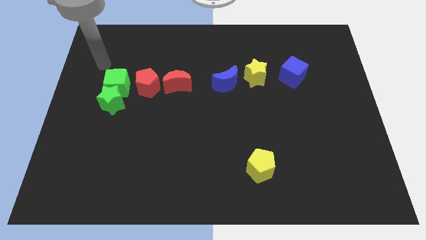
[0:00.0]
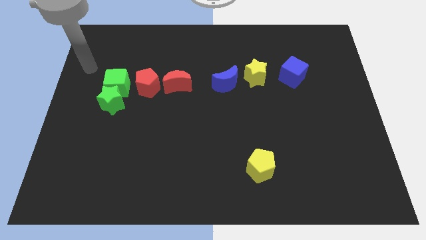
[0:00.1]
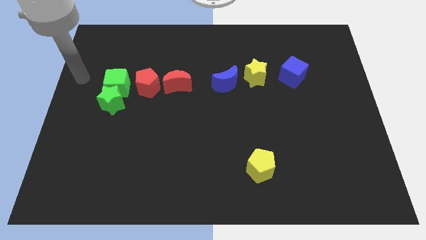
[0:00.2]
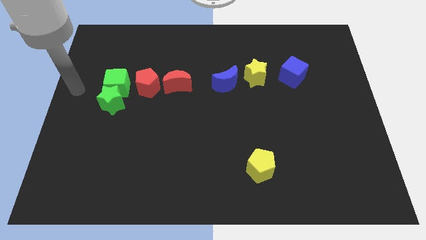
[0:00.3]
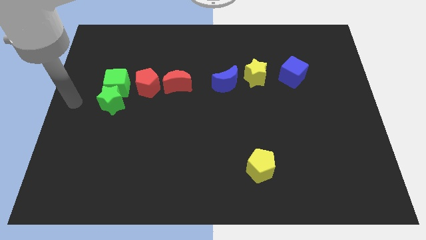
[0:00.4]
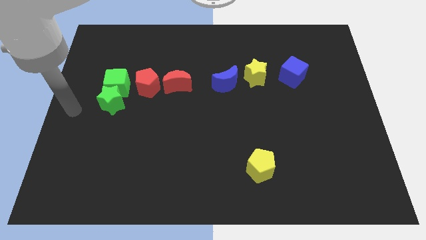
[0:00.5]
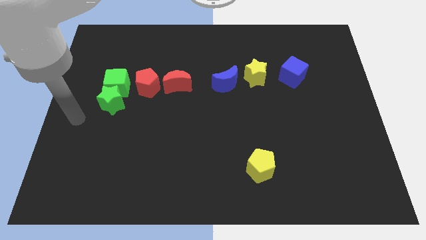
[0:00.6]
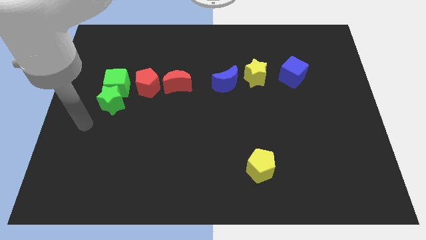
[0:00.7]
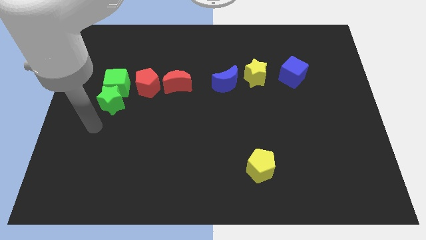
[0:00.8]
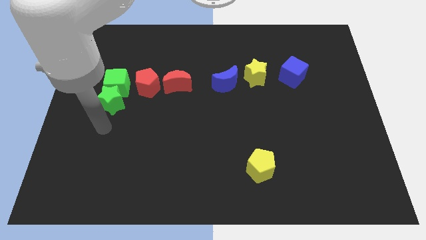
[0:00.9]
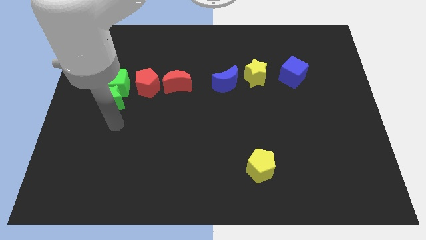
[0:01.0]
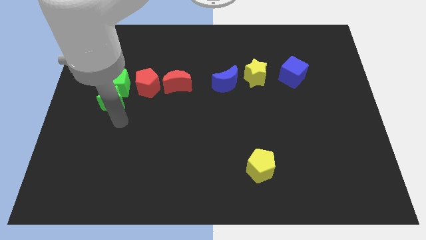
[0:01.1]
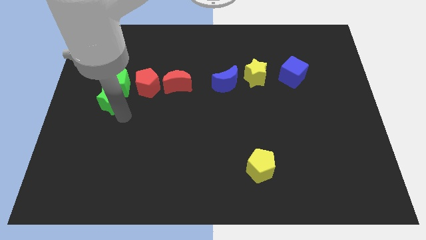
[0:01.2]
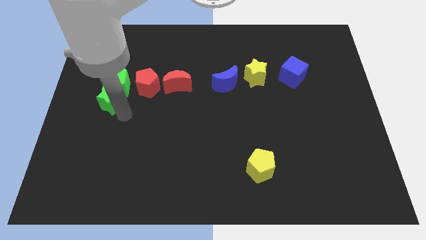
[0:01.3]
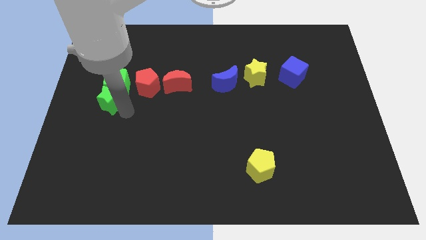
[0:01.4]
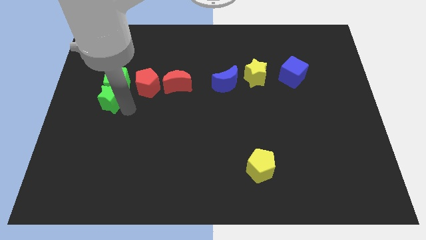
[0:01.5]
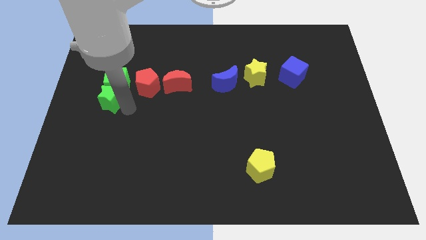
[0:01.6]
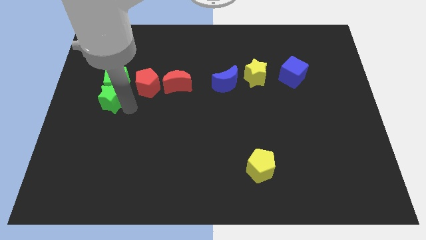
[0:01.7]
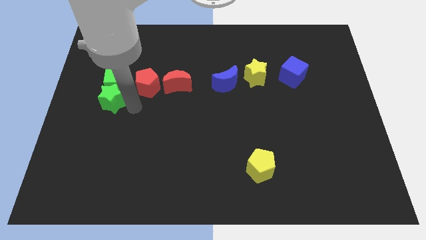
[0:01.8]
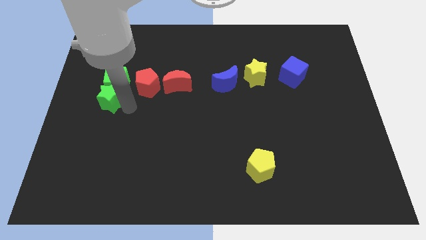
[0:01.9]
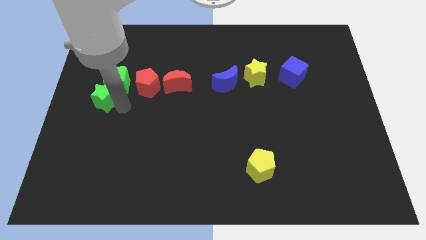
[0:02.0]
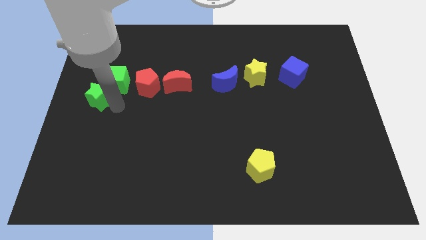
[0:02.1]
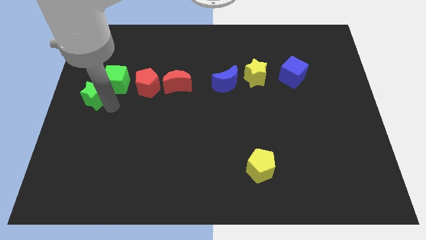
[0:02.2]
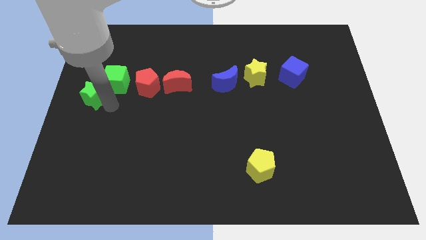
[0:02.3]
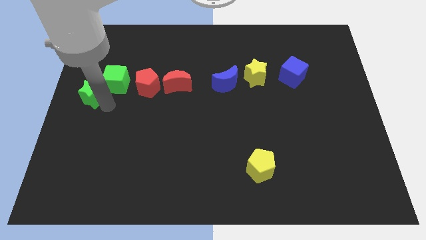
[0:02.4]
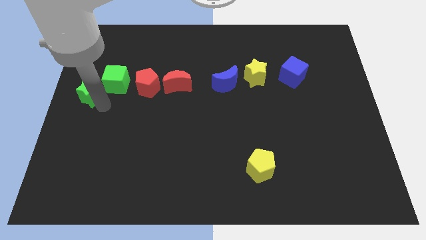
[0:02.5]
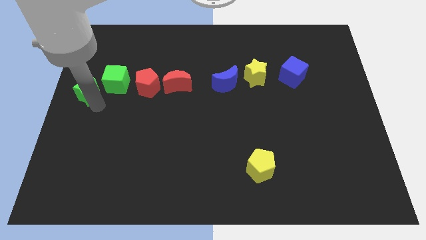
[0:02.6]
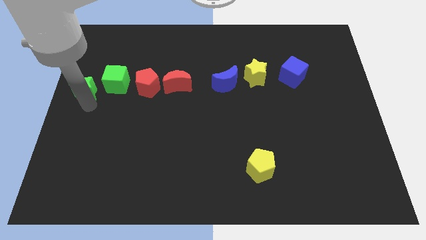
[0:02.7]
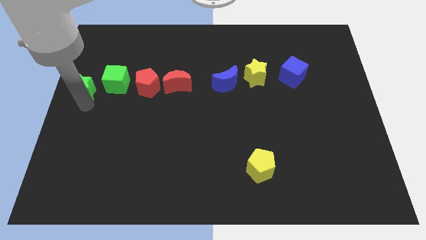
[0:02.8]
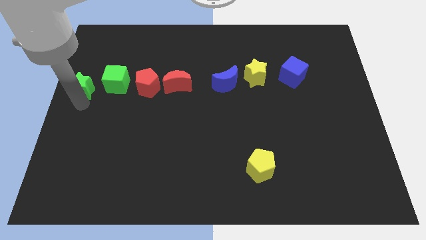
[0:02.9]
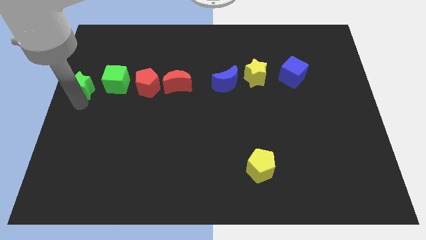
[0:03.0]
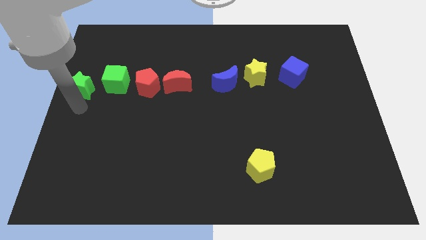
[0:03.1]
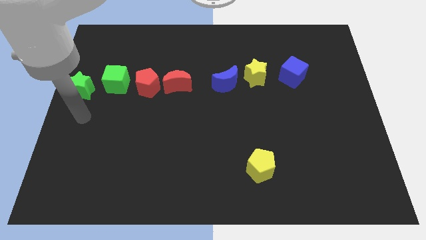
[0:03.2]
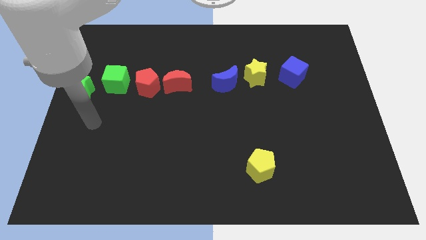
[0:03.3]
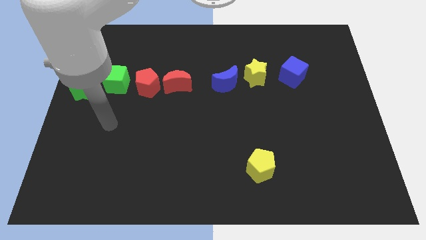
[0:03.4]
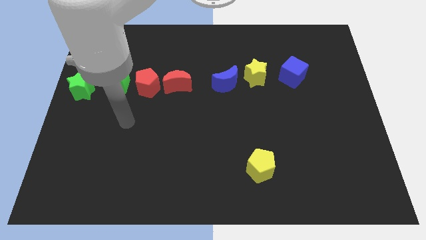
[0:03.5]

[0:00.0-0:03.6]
push the green star to the left of the green cube

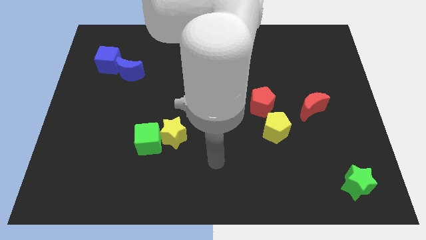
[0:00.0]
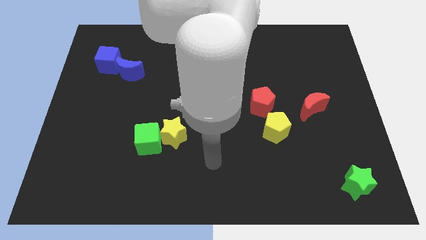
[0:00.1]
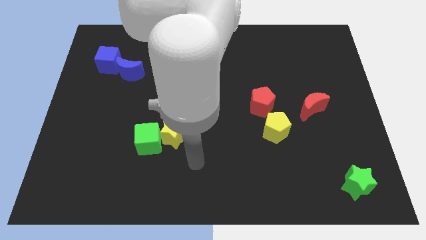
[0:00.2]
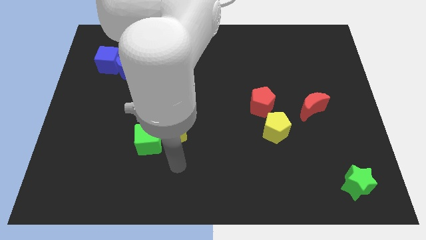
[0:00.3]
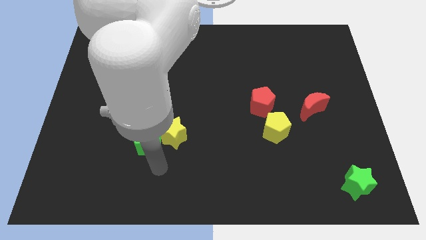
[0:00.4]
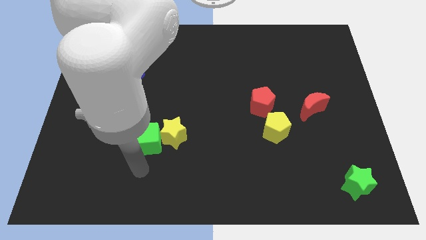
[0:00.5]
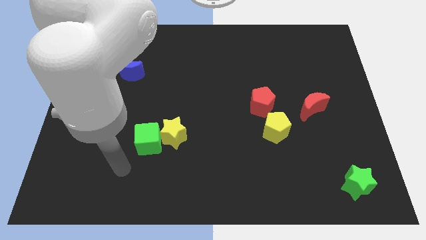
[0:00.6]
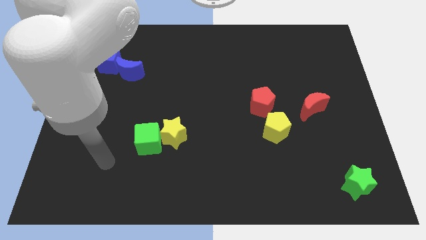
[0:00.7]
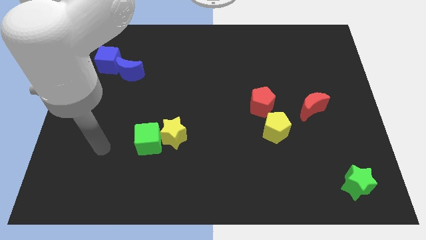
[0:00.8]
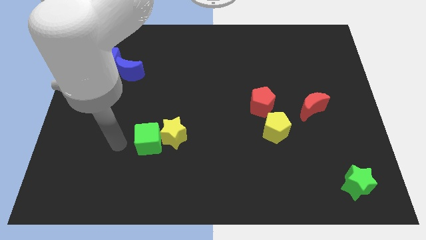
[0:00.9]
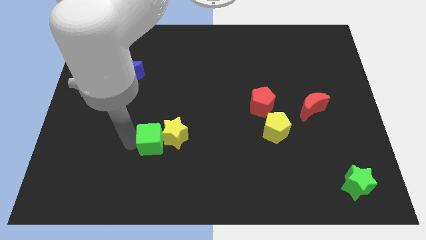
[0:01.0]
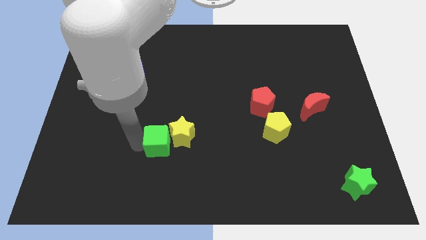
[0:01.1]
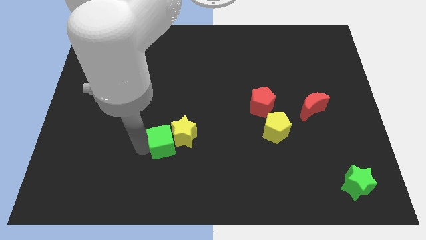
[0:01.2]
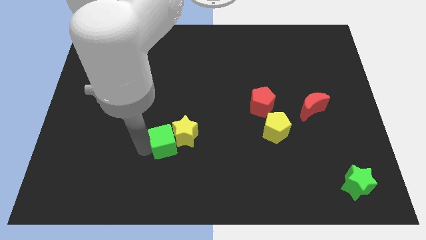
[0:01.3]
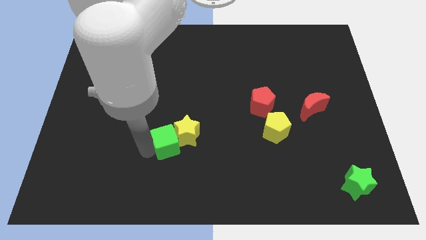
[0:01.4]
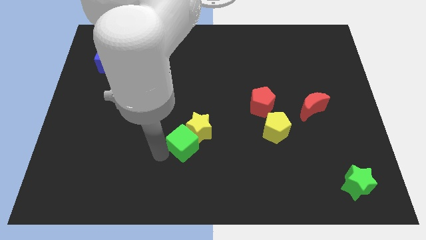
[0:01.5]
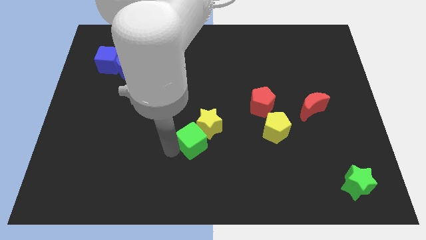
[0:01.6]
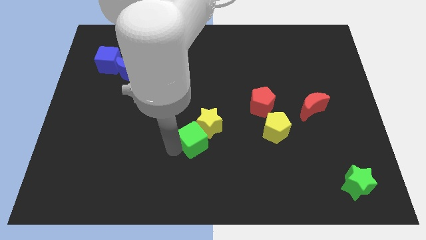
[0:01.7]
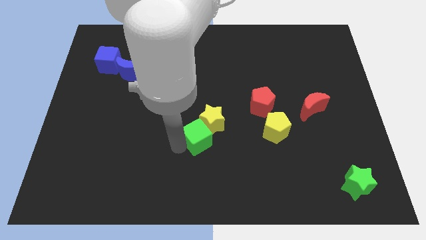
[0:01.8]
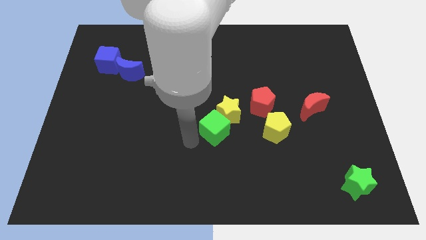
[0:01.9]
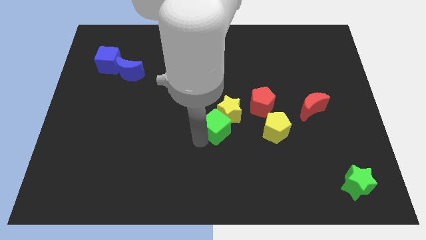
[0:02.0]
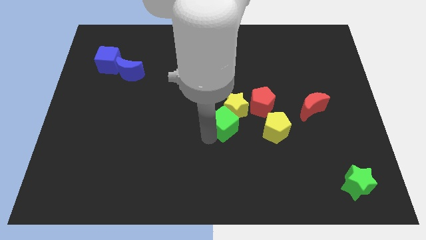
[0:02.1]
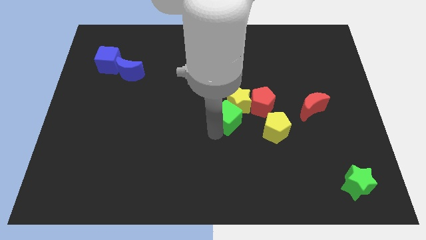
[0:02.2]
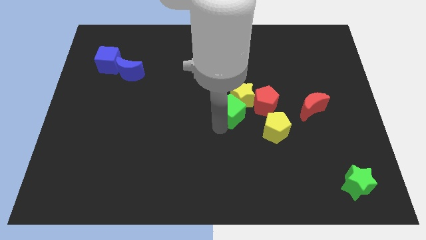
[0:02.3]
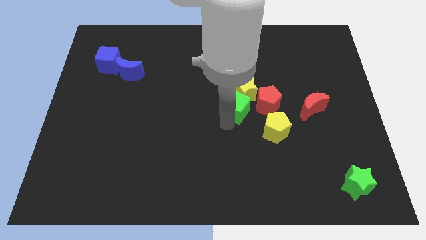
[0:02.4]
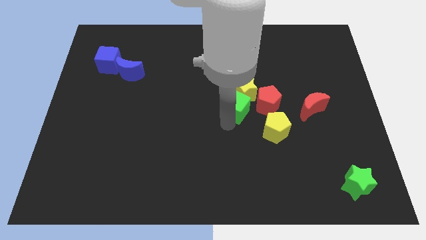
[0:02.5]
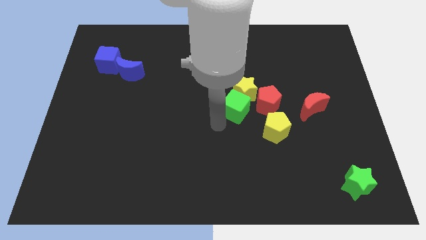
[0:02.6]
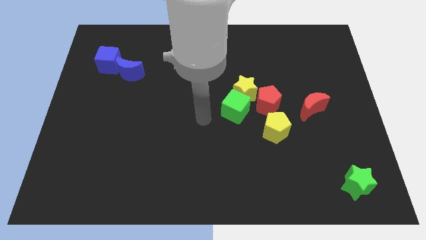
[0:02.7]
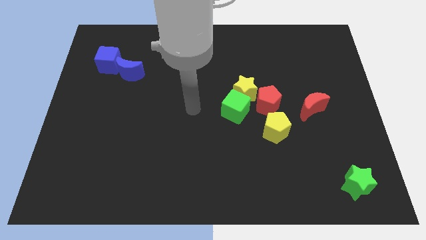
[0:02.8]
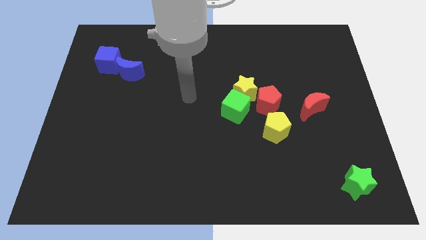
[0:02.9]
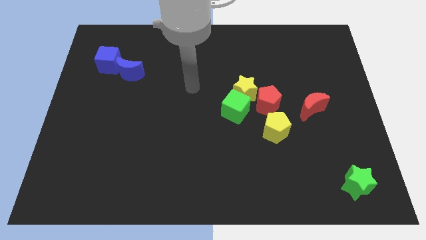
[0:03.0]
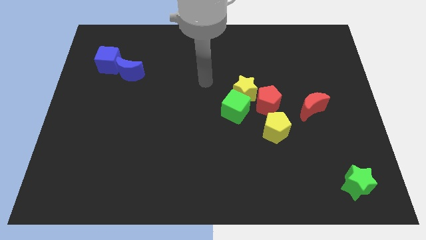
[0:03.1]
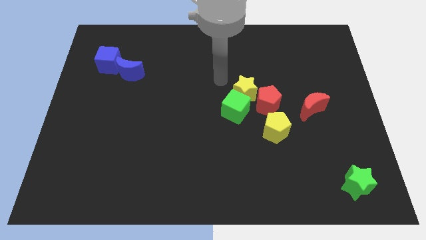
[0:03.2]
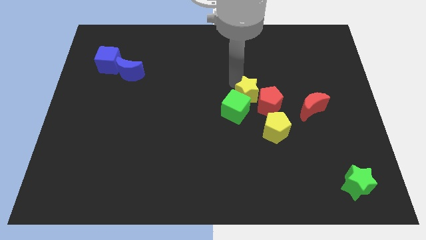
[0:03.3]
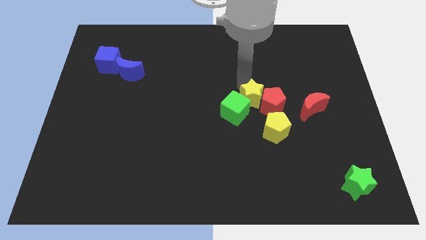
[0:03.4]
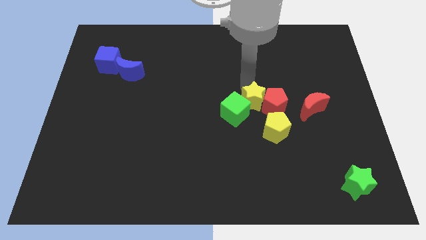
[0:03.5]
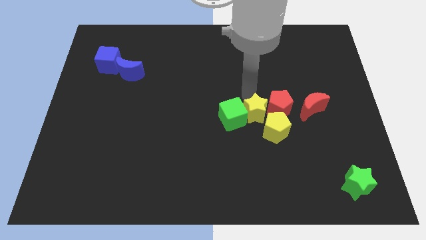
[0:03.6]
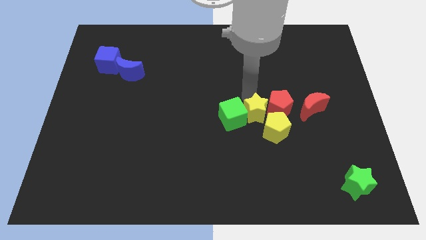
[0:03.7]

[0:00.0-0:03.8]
place the yellow star in between the red pentagon and green cube

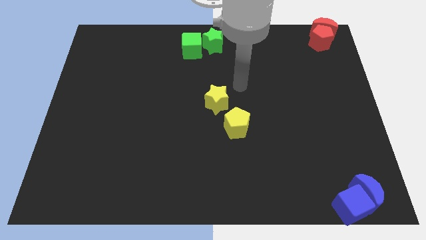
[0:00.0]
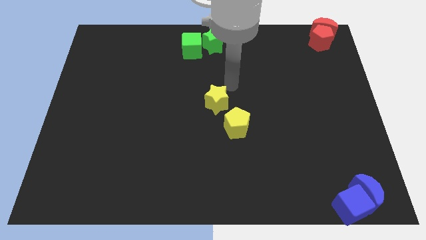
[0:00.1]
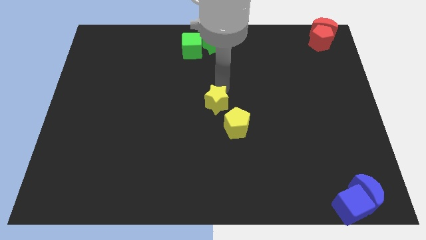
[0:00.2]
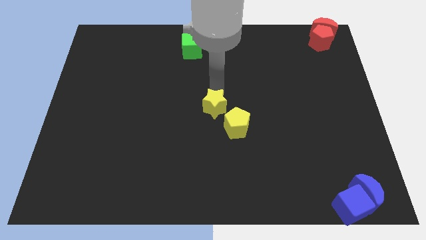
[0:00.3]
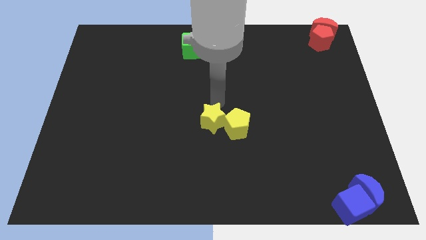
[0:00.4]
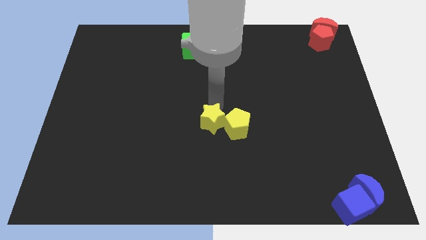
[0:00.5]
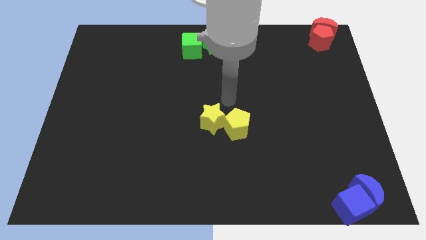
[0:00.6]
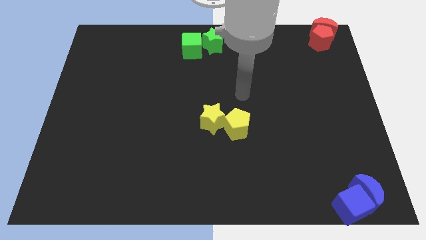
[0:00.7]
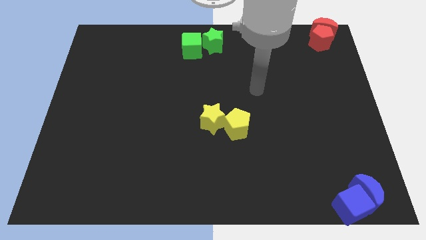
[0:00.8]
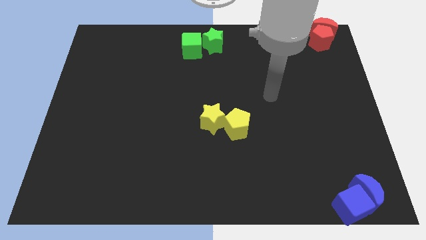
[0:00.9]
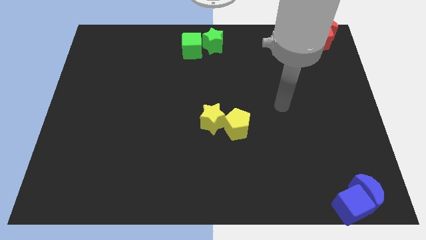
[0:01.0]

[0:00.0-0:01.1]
place yellow star to the left of yellow pentagon

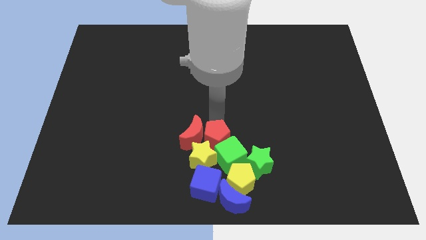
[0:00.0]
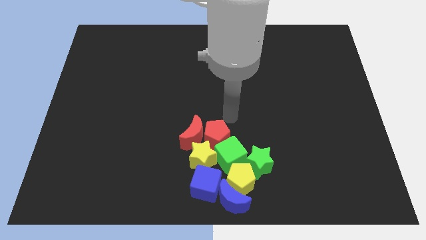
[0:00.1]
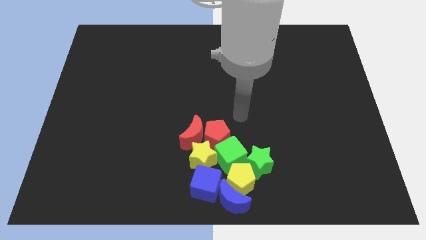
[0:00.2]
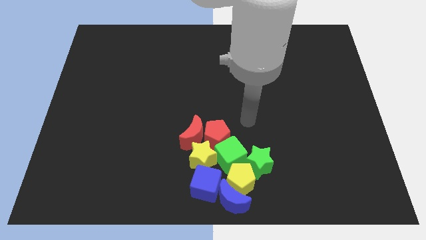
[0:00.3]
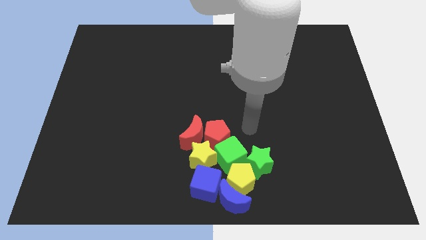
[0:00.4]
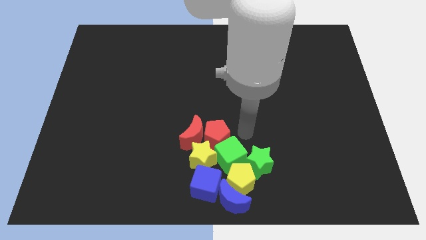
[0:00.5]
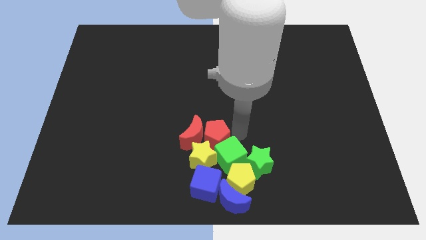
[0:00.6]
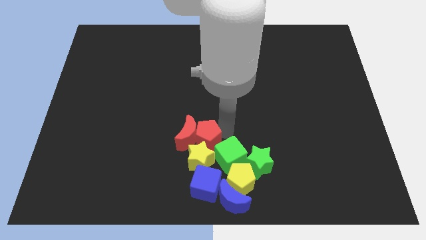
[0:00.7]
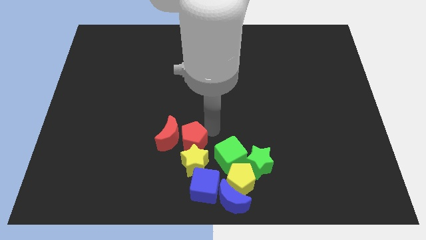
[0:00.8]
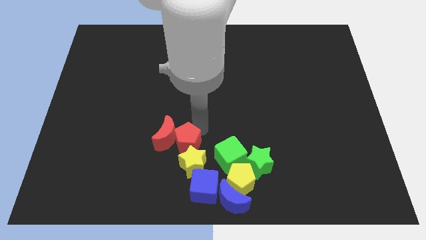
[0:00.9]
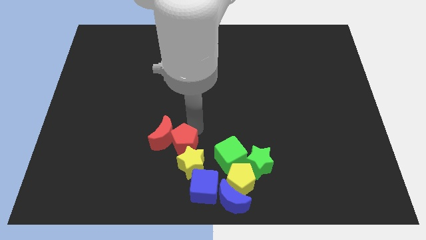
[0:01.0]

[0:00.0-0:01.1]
push the red pentagon into the red crescent and yellow star
